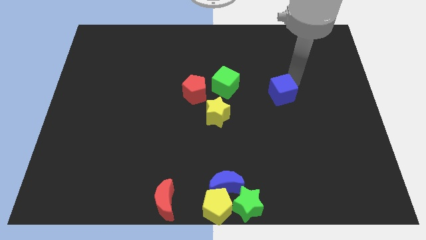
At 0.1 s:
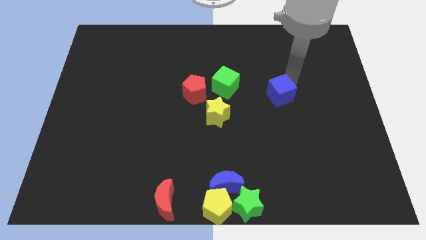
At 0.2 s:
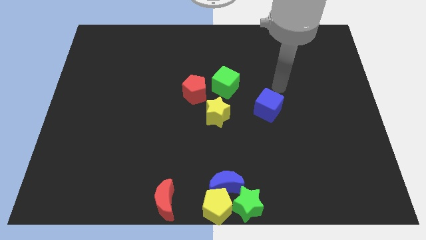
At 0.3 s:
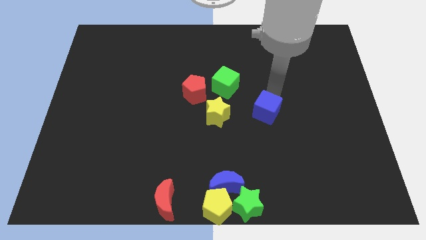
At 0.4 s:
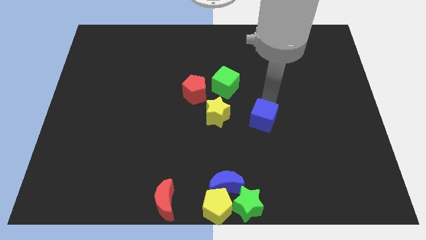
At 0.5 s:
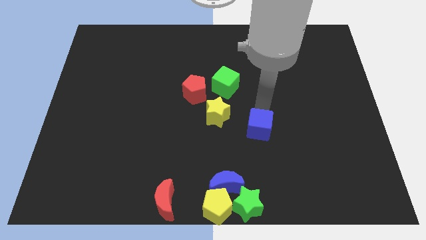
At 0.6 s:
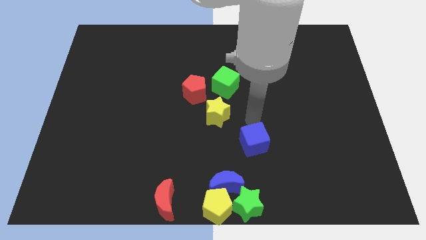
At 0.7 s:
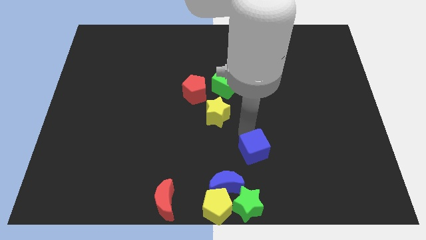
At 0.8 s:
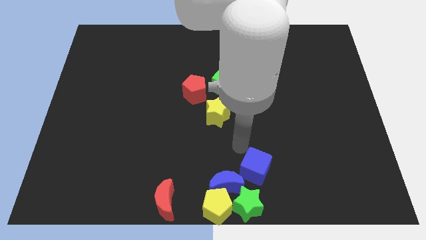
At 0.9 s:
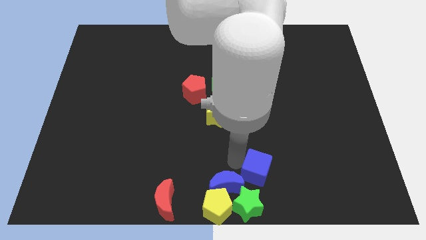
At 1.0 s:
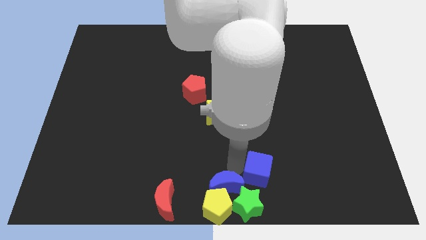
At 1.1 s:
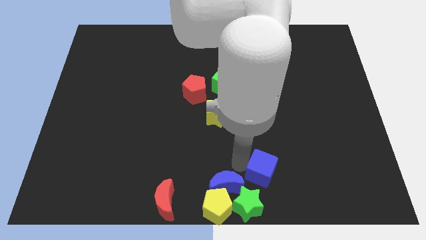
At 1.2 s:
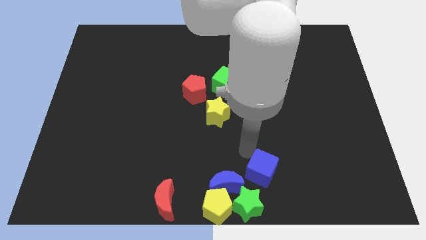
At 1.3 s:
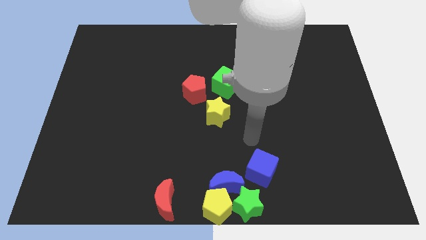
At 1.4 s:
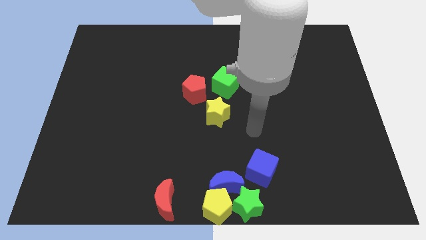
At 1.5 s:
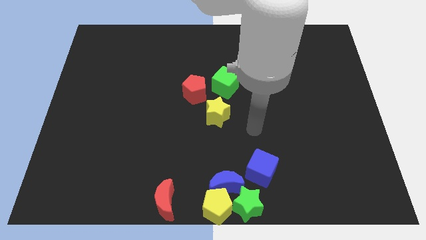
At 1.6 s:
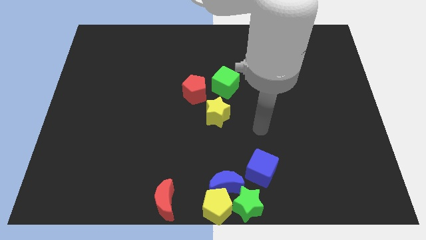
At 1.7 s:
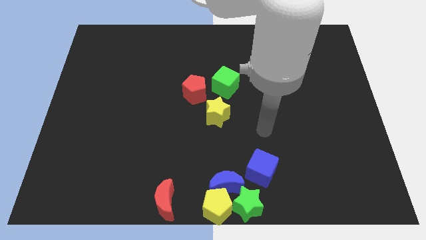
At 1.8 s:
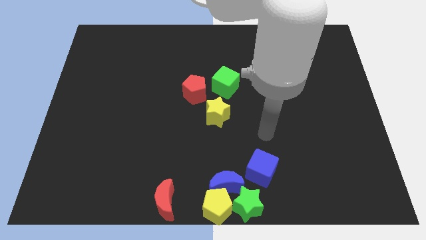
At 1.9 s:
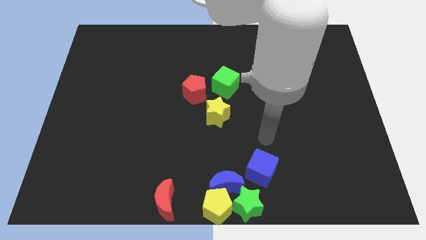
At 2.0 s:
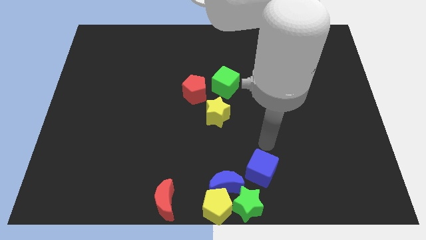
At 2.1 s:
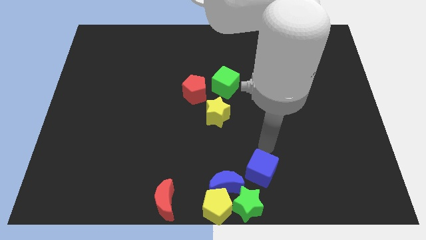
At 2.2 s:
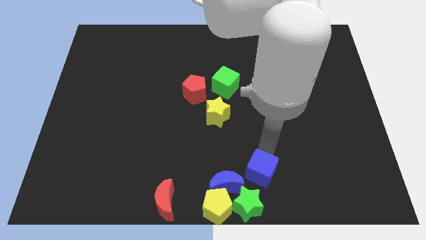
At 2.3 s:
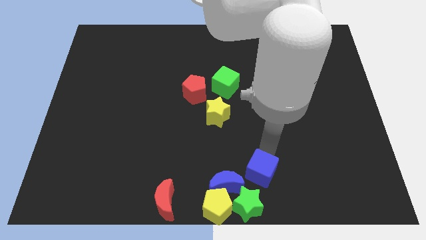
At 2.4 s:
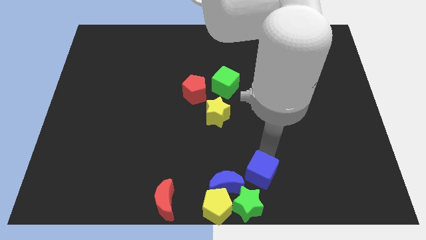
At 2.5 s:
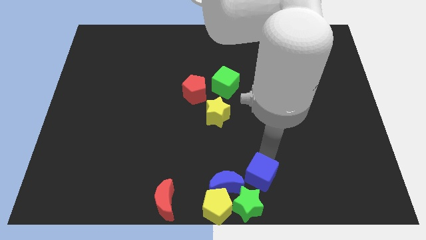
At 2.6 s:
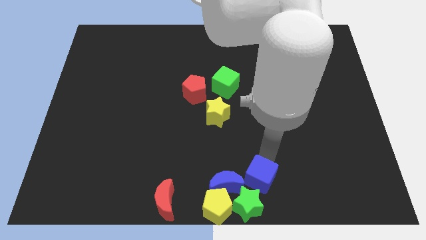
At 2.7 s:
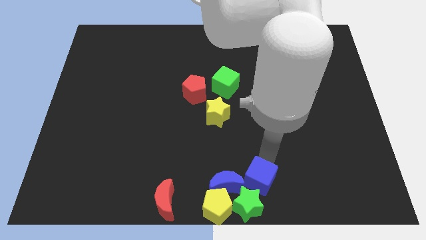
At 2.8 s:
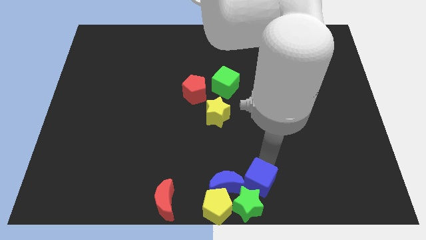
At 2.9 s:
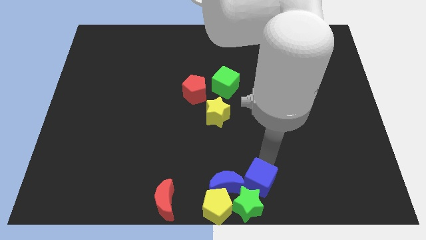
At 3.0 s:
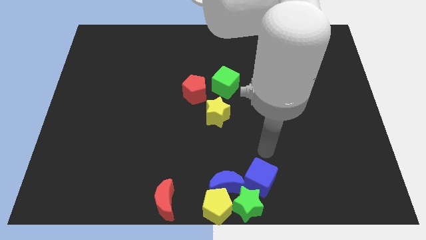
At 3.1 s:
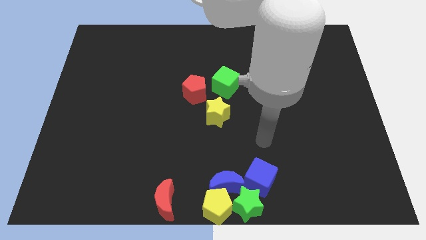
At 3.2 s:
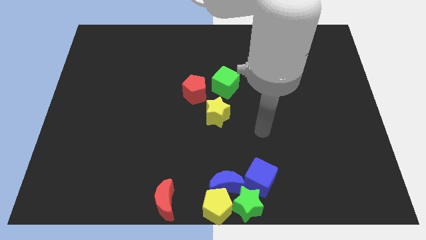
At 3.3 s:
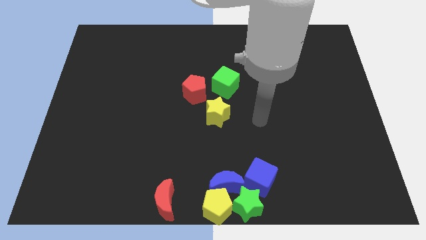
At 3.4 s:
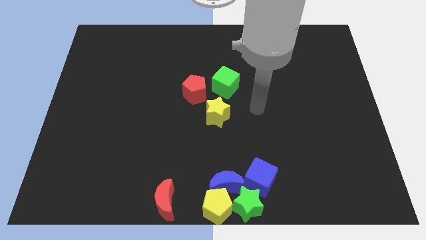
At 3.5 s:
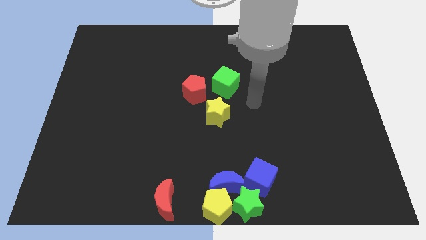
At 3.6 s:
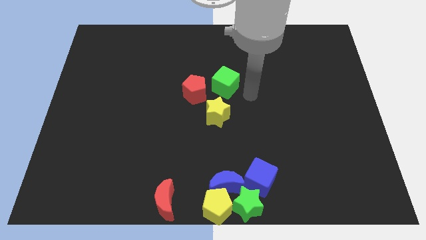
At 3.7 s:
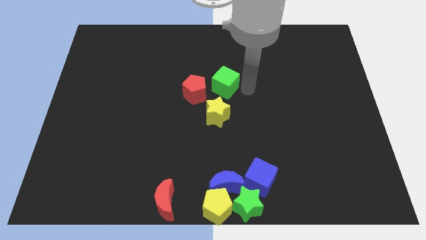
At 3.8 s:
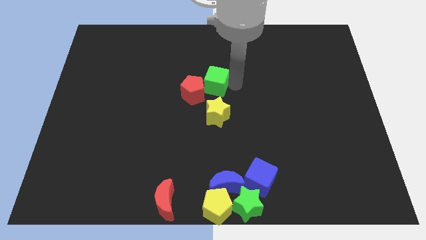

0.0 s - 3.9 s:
place the blue cube above the green star

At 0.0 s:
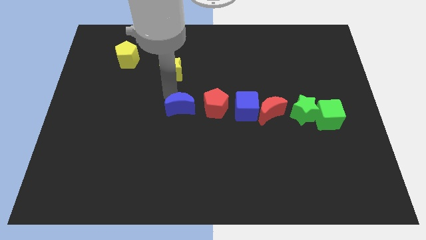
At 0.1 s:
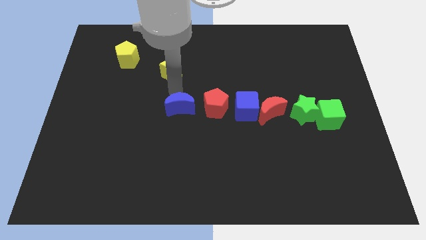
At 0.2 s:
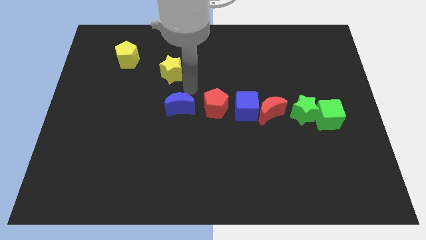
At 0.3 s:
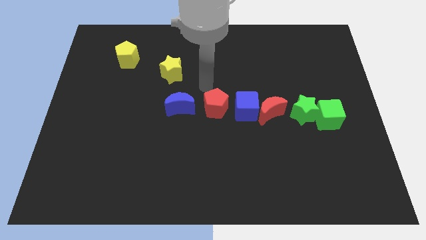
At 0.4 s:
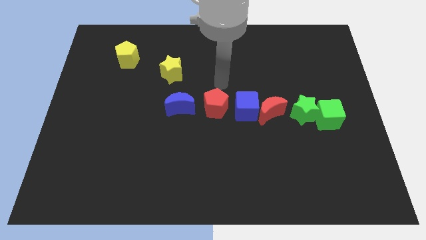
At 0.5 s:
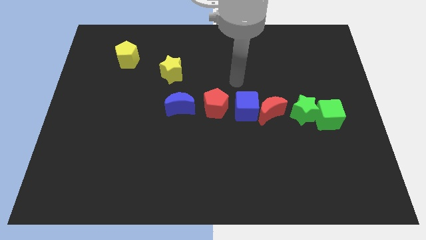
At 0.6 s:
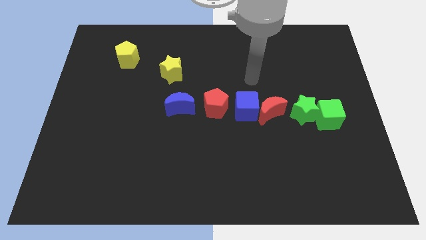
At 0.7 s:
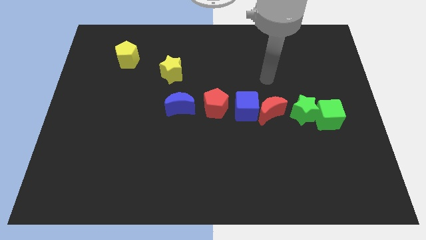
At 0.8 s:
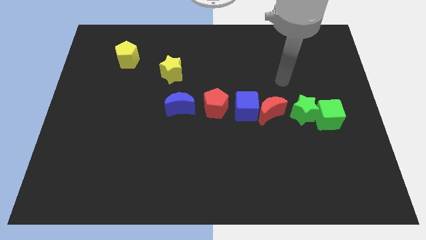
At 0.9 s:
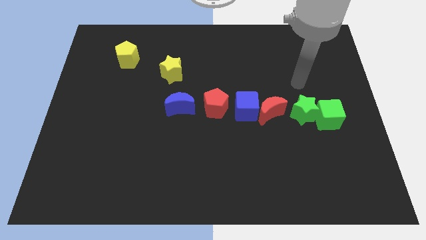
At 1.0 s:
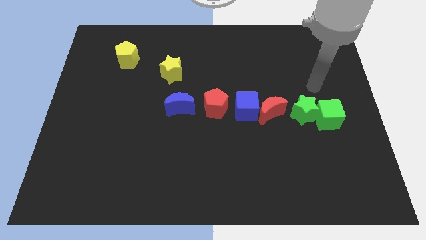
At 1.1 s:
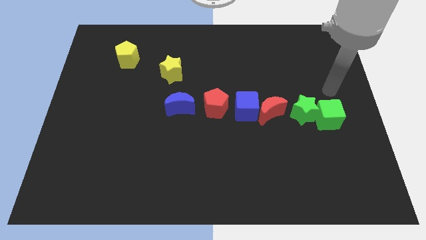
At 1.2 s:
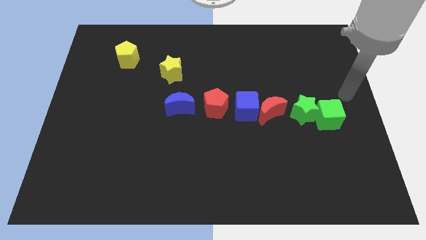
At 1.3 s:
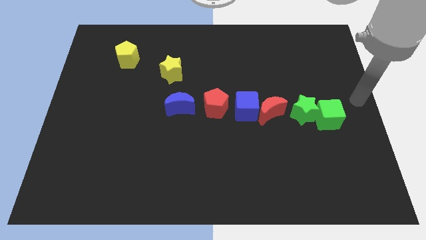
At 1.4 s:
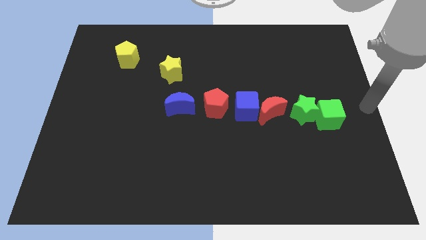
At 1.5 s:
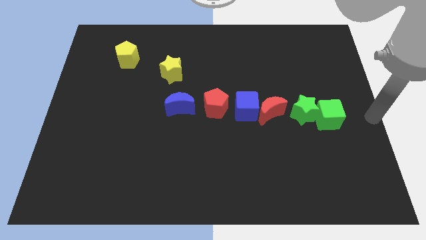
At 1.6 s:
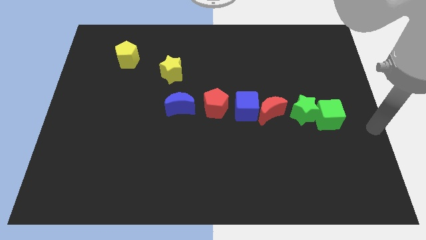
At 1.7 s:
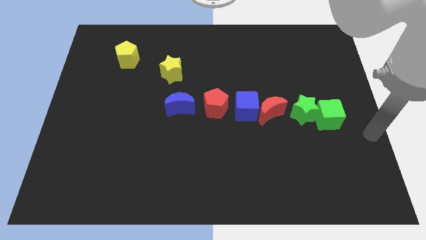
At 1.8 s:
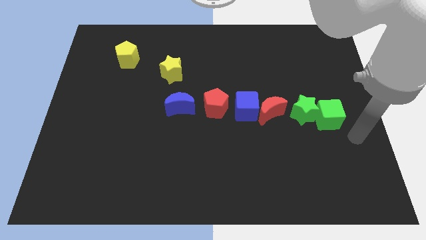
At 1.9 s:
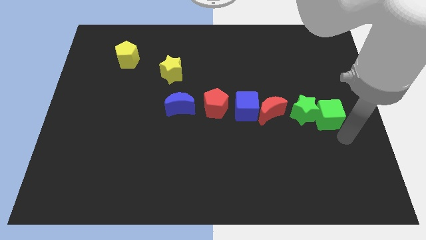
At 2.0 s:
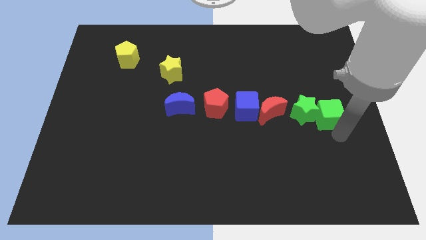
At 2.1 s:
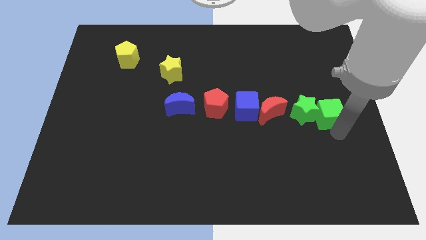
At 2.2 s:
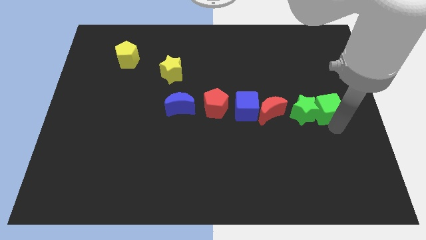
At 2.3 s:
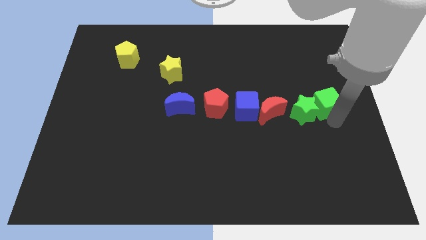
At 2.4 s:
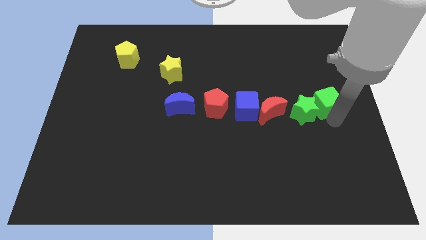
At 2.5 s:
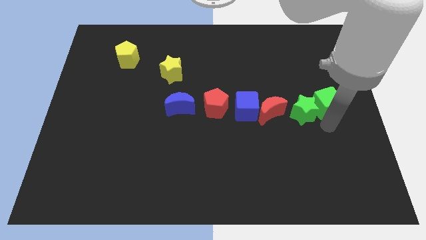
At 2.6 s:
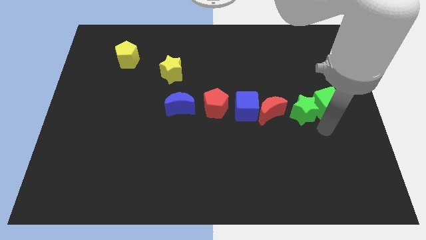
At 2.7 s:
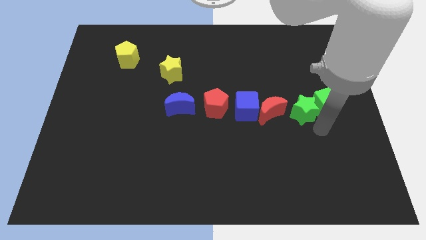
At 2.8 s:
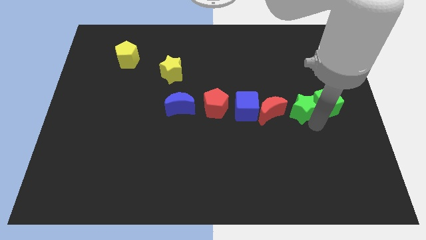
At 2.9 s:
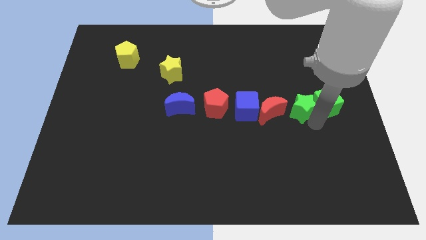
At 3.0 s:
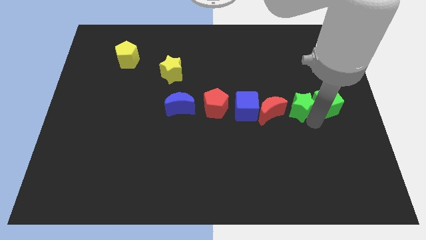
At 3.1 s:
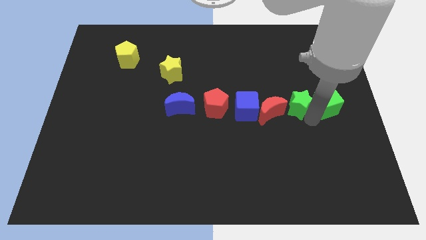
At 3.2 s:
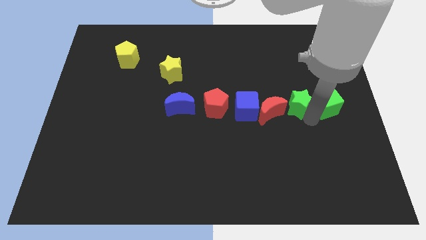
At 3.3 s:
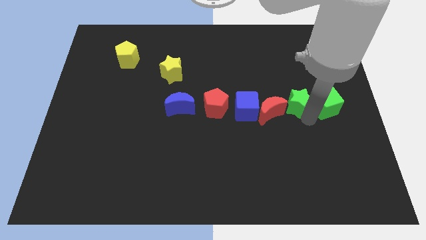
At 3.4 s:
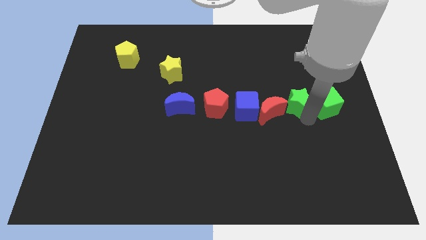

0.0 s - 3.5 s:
move green cube along with green star

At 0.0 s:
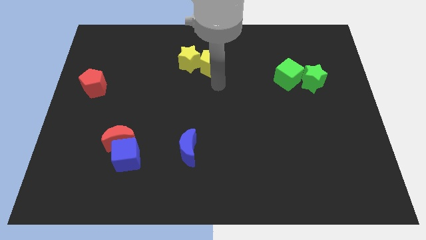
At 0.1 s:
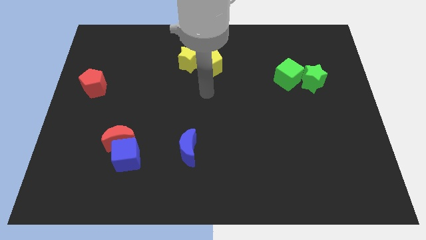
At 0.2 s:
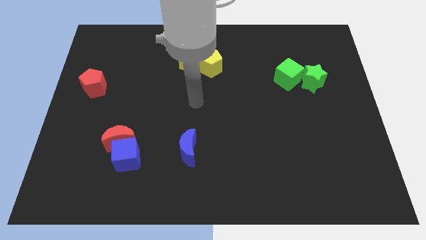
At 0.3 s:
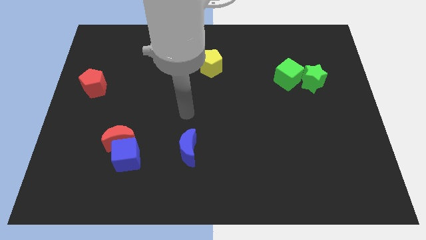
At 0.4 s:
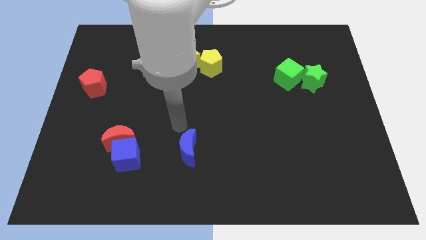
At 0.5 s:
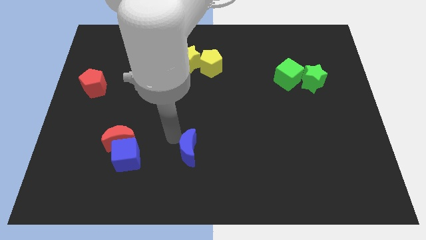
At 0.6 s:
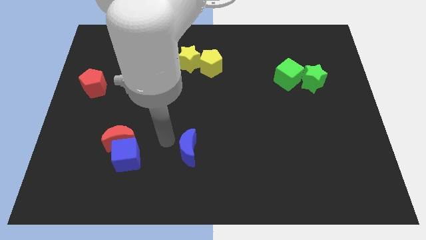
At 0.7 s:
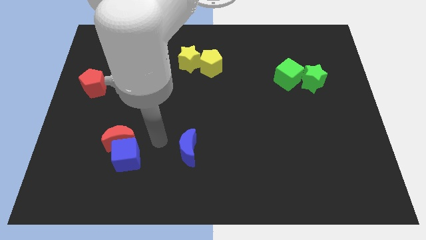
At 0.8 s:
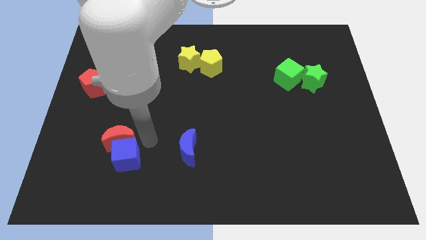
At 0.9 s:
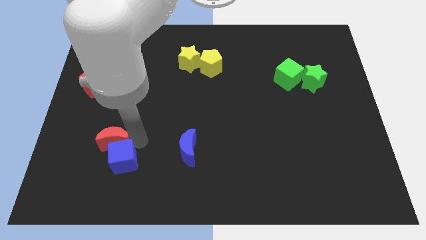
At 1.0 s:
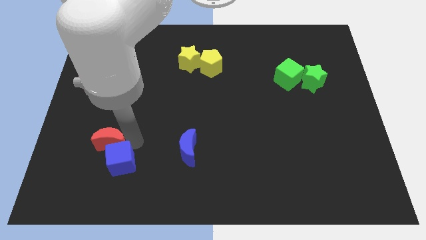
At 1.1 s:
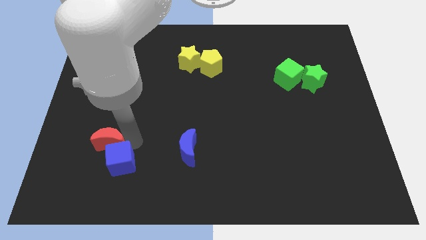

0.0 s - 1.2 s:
move your arm to the right of the blue cube

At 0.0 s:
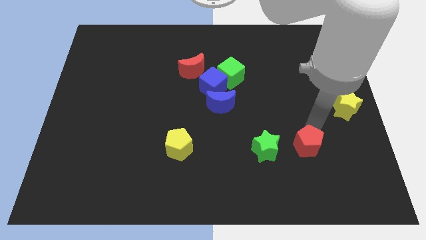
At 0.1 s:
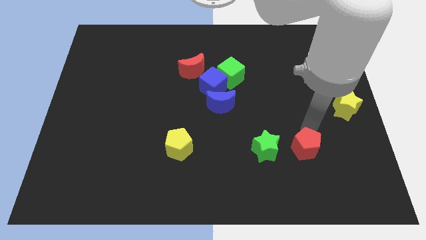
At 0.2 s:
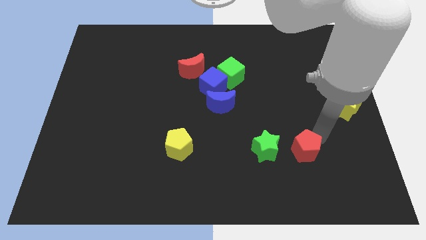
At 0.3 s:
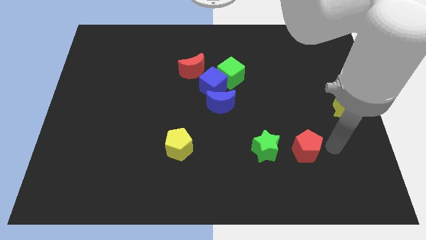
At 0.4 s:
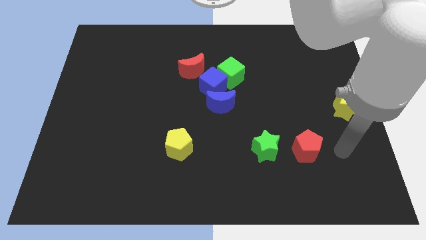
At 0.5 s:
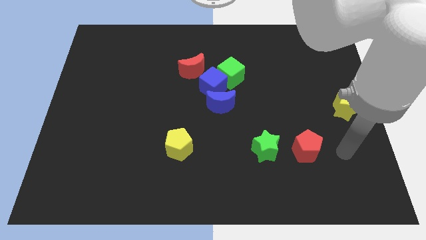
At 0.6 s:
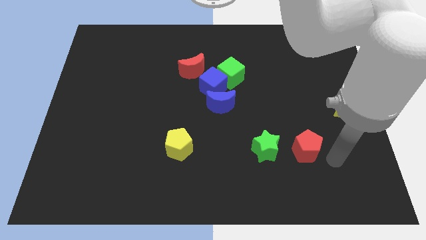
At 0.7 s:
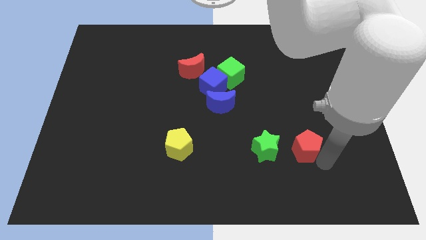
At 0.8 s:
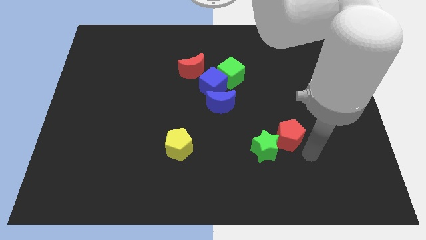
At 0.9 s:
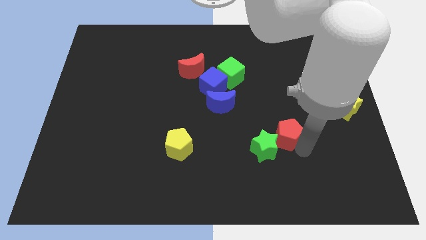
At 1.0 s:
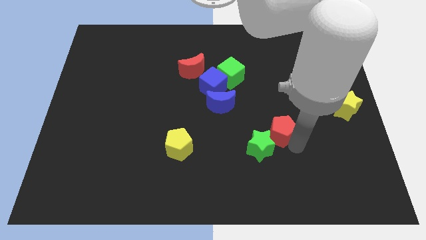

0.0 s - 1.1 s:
move the red pentagon to the top right of the green star
